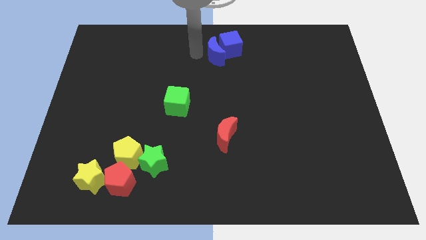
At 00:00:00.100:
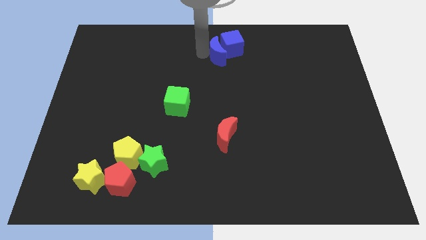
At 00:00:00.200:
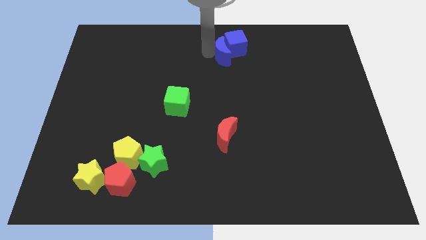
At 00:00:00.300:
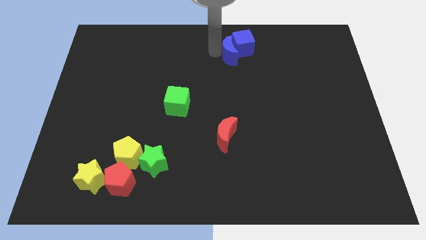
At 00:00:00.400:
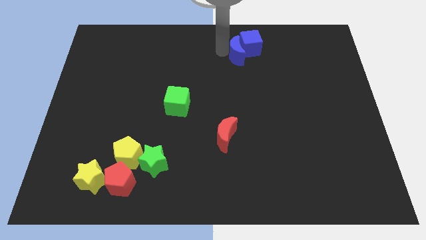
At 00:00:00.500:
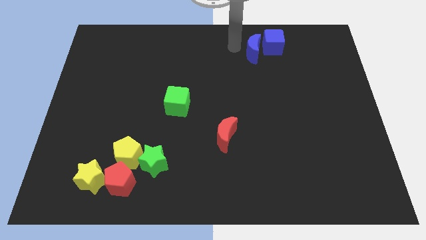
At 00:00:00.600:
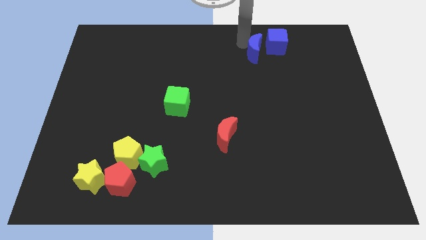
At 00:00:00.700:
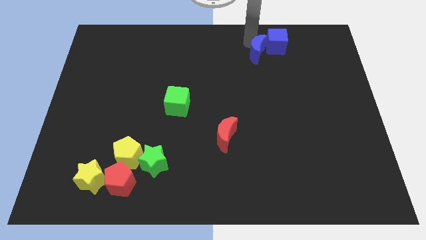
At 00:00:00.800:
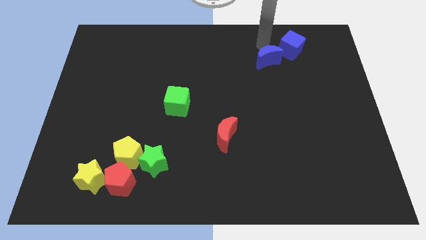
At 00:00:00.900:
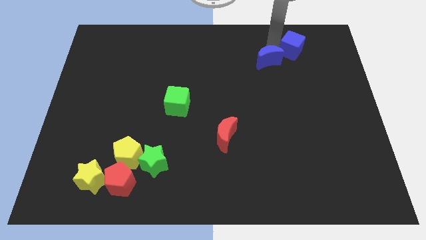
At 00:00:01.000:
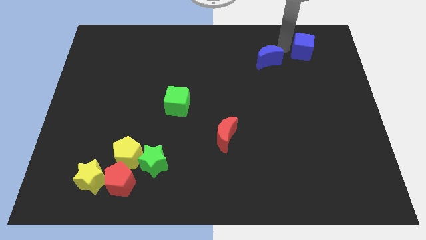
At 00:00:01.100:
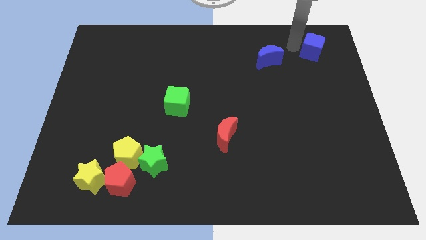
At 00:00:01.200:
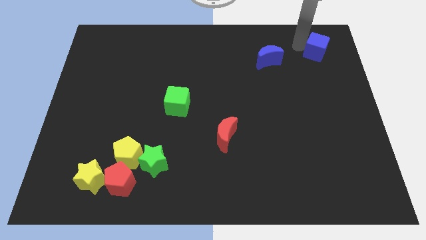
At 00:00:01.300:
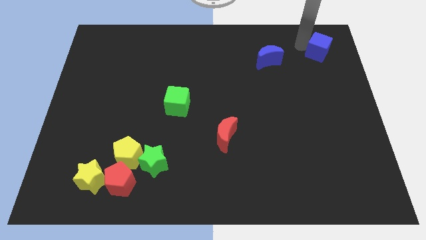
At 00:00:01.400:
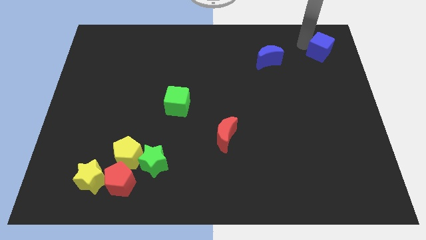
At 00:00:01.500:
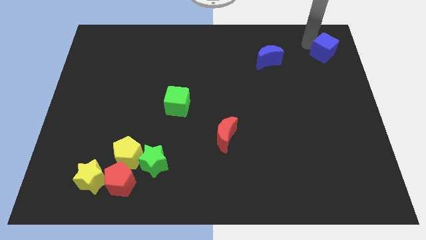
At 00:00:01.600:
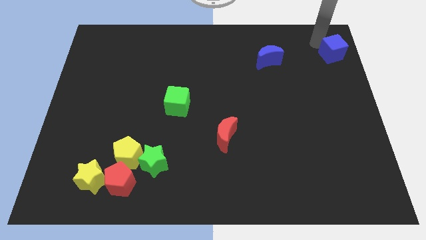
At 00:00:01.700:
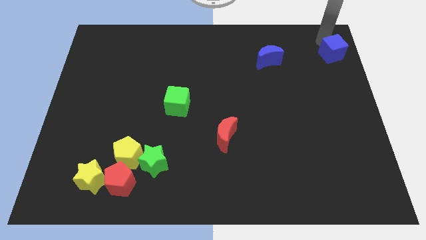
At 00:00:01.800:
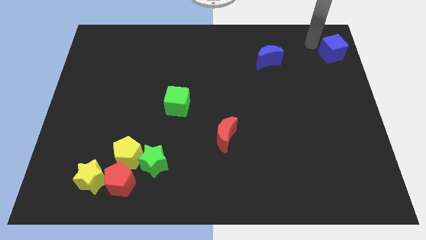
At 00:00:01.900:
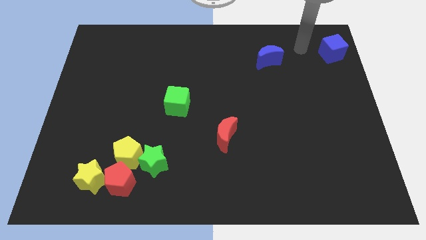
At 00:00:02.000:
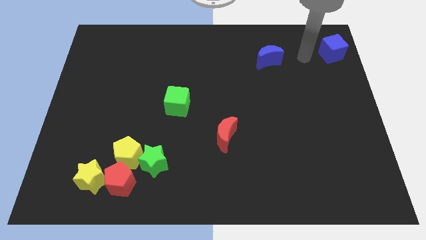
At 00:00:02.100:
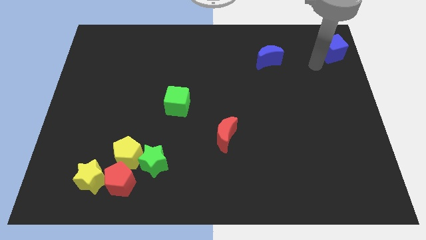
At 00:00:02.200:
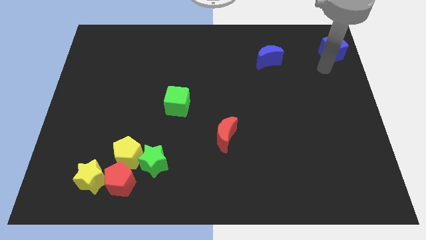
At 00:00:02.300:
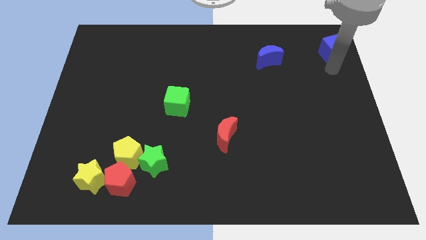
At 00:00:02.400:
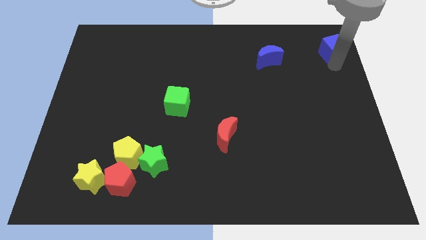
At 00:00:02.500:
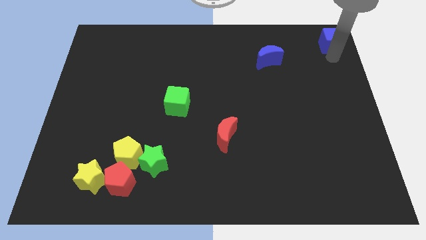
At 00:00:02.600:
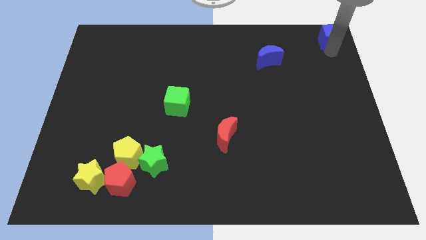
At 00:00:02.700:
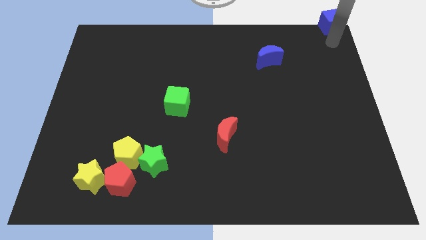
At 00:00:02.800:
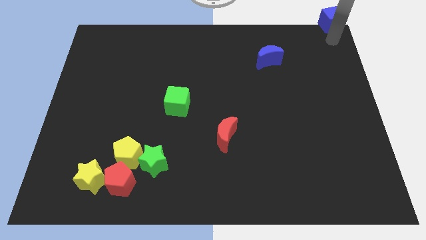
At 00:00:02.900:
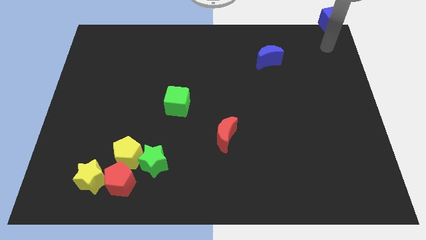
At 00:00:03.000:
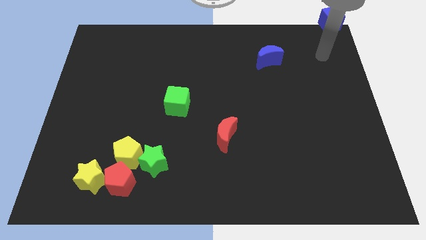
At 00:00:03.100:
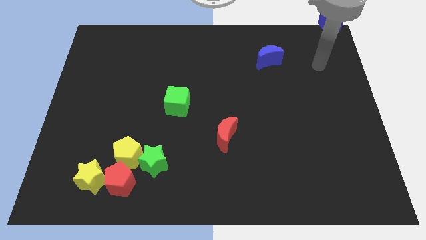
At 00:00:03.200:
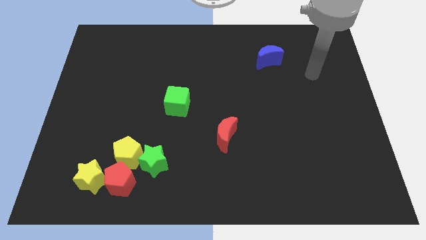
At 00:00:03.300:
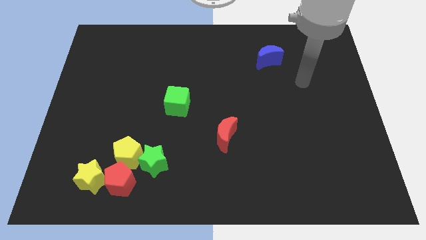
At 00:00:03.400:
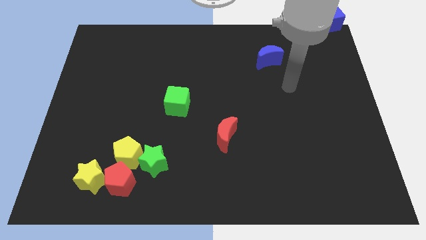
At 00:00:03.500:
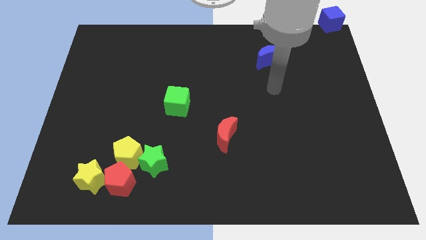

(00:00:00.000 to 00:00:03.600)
separate the blue cube and the blue moon

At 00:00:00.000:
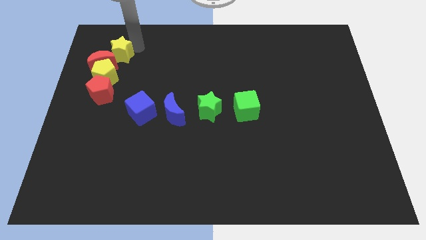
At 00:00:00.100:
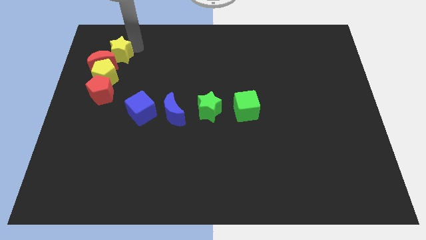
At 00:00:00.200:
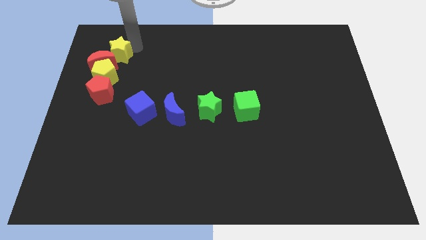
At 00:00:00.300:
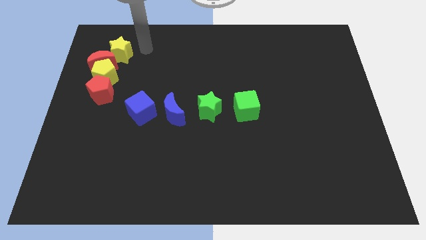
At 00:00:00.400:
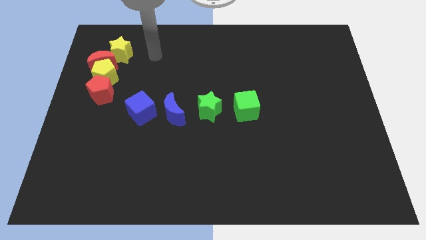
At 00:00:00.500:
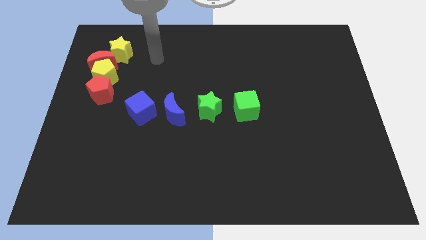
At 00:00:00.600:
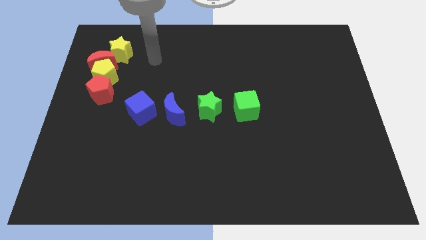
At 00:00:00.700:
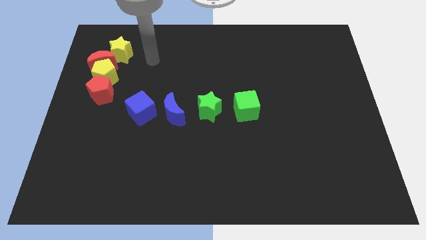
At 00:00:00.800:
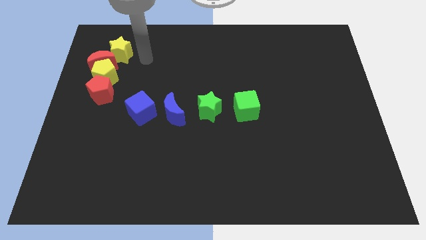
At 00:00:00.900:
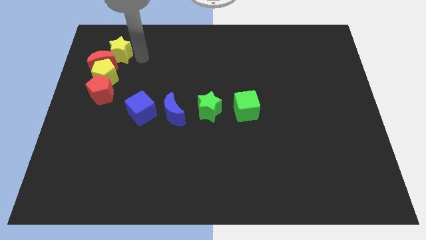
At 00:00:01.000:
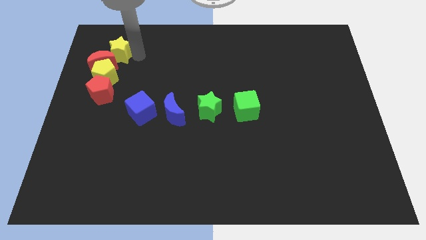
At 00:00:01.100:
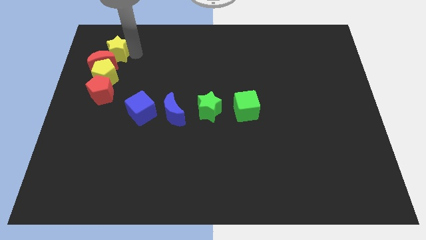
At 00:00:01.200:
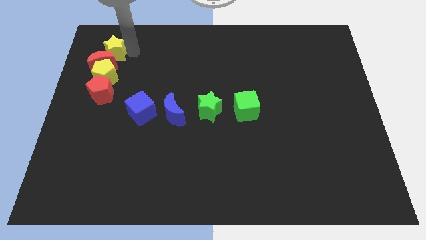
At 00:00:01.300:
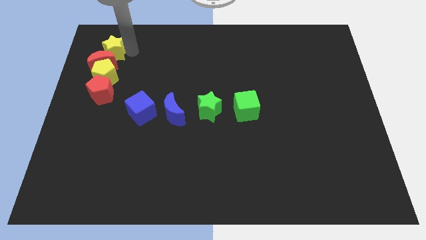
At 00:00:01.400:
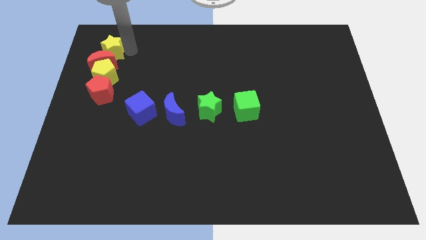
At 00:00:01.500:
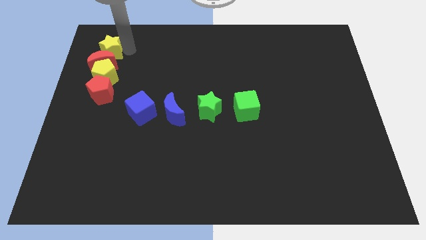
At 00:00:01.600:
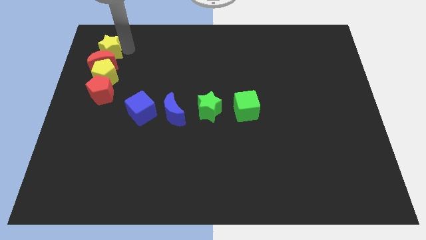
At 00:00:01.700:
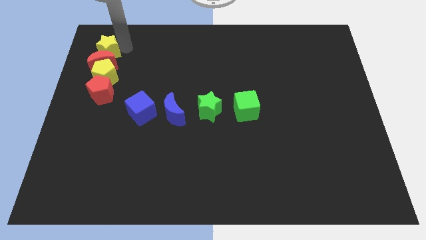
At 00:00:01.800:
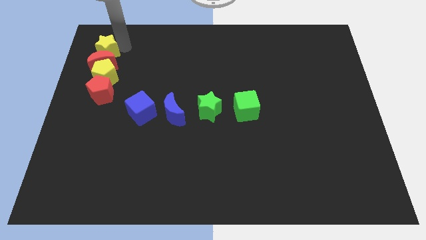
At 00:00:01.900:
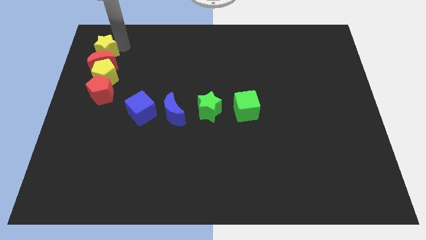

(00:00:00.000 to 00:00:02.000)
point your arm above yellow star

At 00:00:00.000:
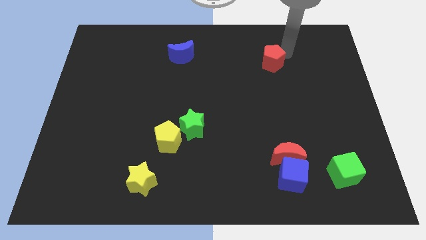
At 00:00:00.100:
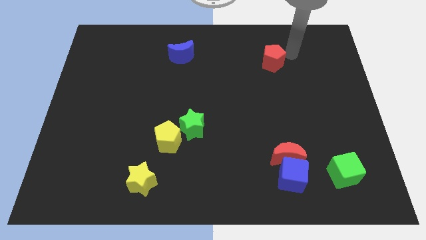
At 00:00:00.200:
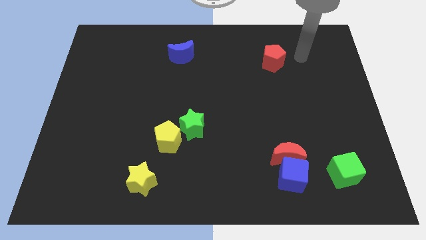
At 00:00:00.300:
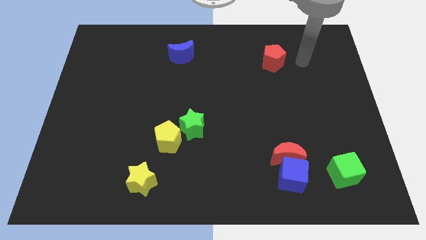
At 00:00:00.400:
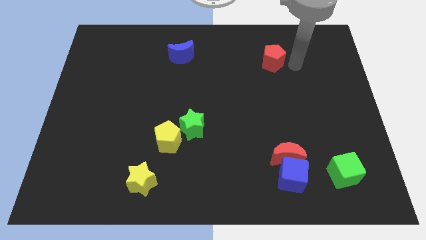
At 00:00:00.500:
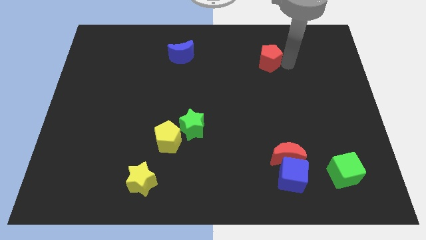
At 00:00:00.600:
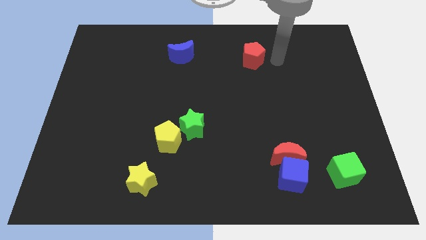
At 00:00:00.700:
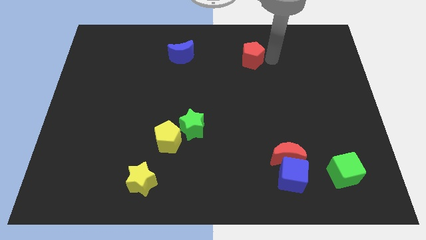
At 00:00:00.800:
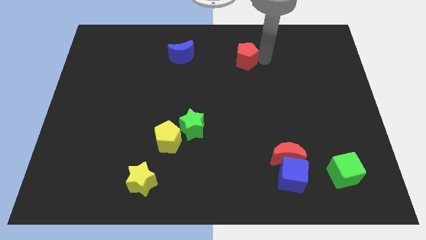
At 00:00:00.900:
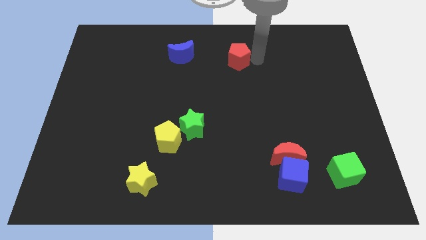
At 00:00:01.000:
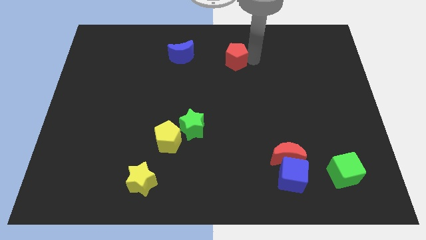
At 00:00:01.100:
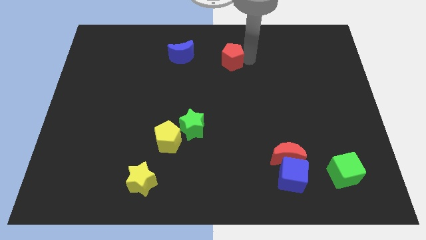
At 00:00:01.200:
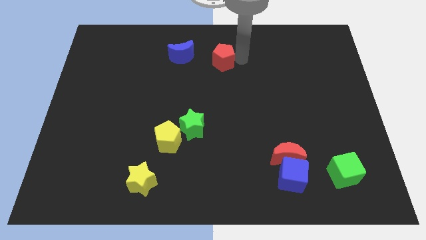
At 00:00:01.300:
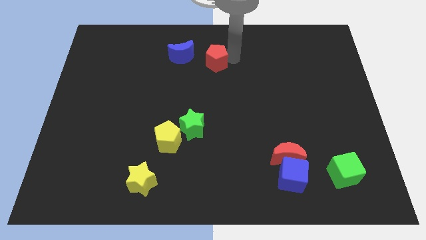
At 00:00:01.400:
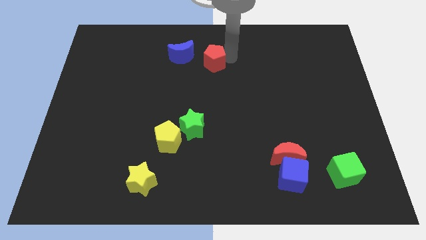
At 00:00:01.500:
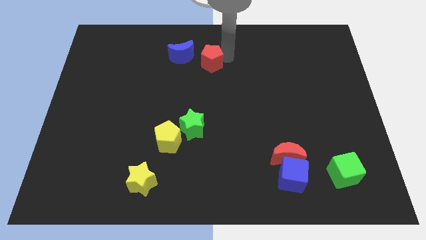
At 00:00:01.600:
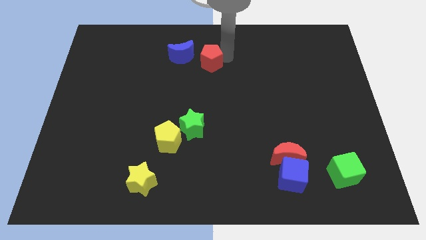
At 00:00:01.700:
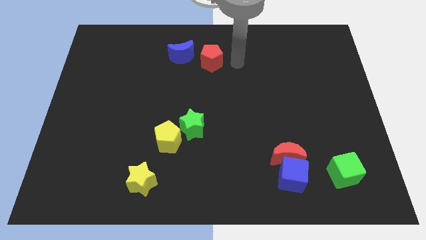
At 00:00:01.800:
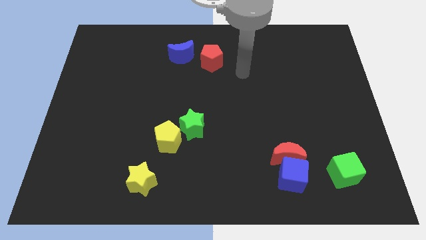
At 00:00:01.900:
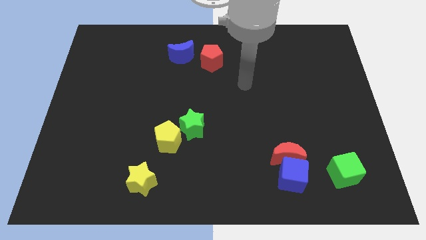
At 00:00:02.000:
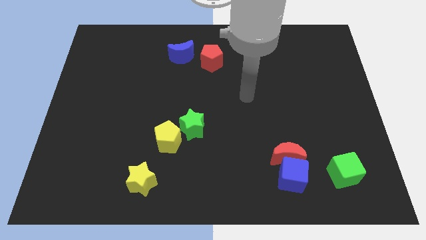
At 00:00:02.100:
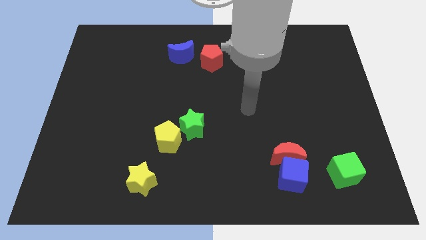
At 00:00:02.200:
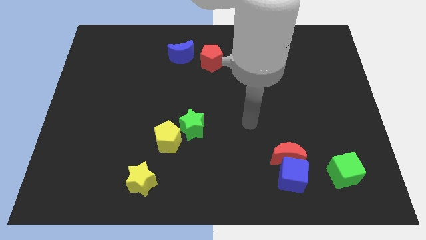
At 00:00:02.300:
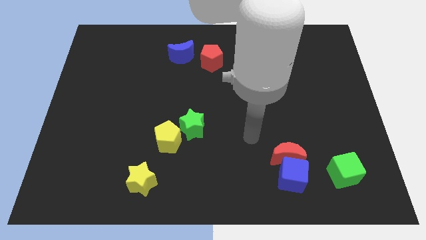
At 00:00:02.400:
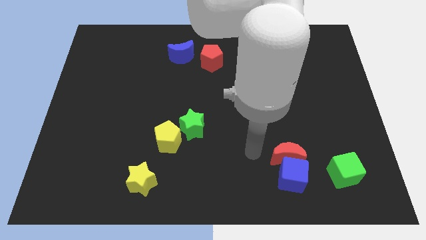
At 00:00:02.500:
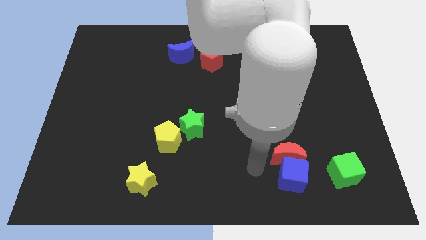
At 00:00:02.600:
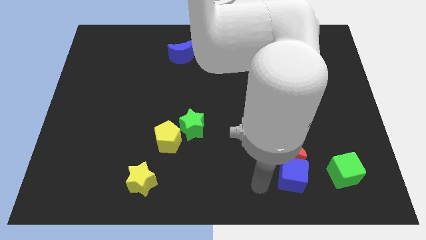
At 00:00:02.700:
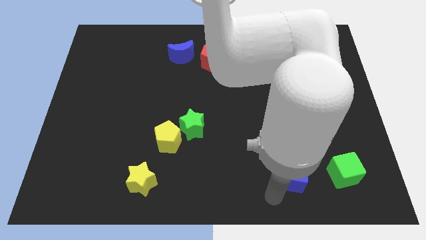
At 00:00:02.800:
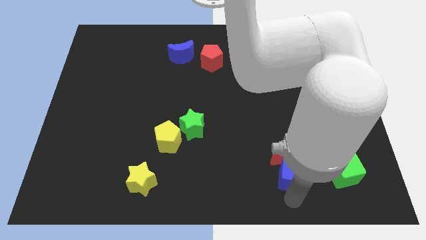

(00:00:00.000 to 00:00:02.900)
move the red pentagon slightly to the left

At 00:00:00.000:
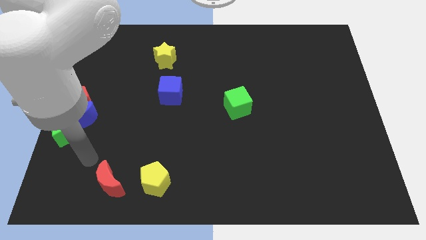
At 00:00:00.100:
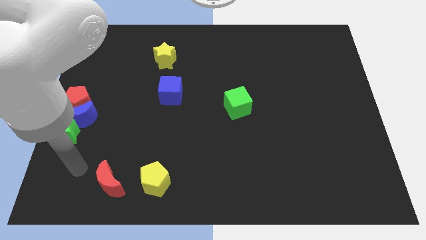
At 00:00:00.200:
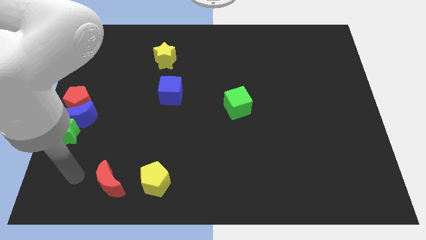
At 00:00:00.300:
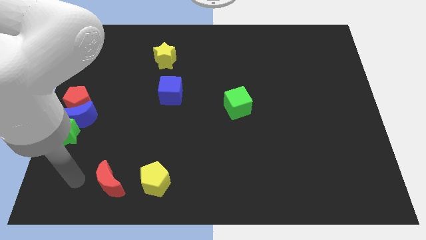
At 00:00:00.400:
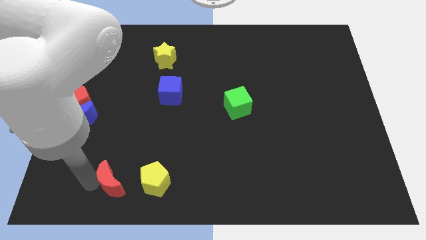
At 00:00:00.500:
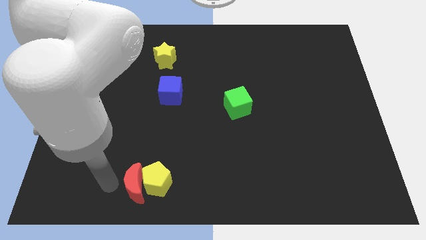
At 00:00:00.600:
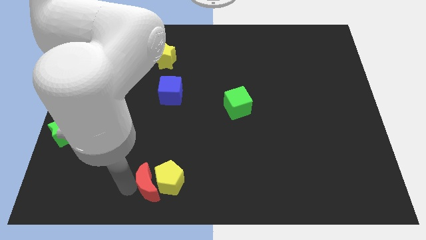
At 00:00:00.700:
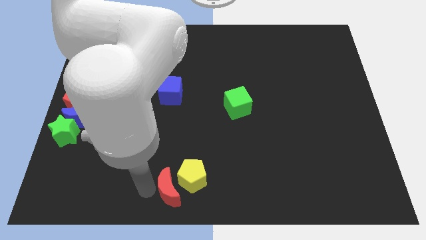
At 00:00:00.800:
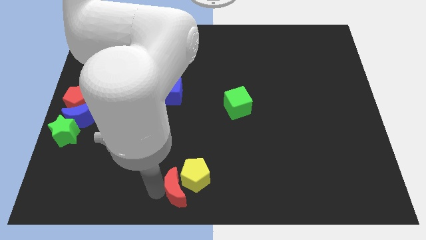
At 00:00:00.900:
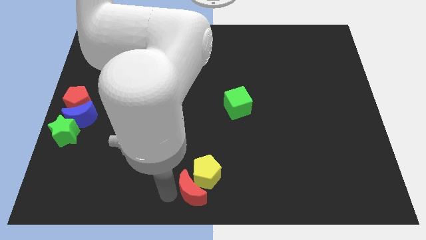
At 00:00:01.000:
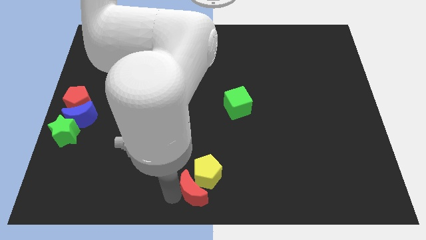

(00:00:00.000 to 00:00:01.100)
push the red crescent to the left of the yellow pentagon
